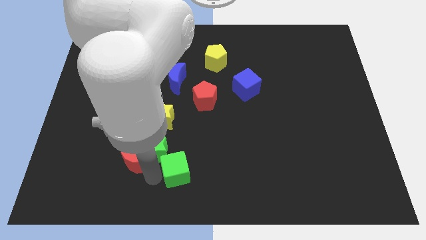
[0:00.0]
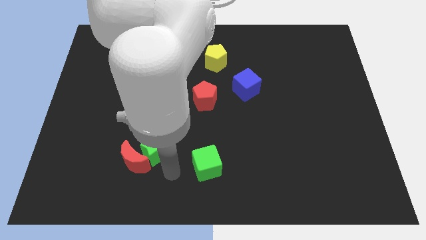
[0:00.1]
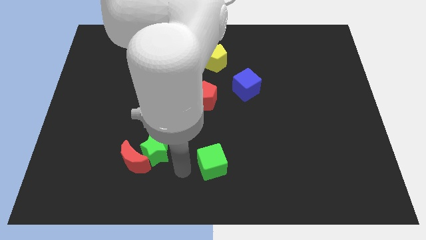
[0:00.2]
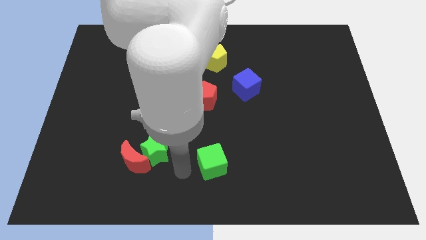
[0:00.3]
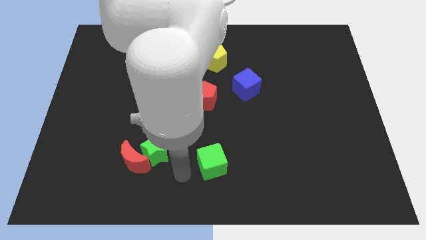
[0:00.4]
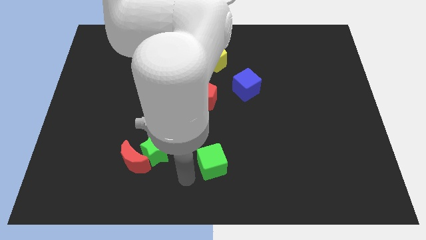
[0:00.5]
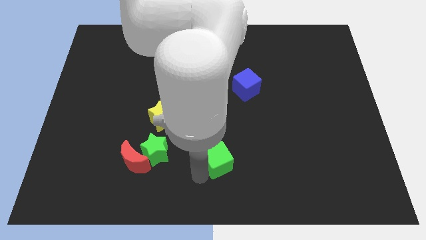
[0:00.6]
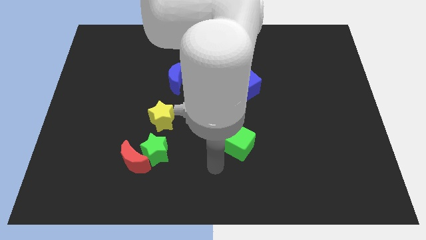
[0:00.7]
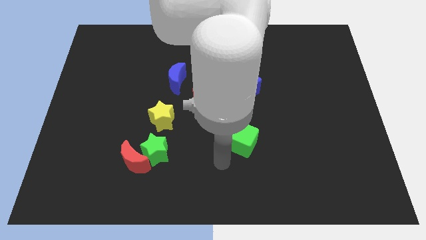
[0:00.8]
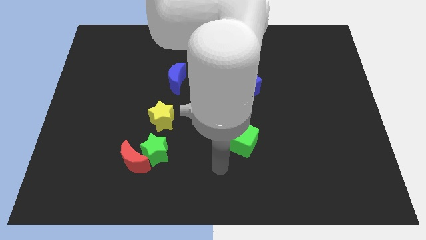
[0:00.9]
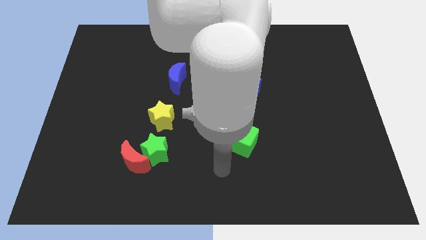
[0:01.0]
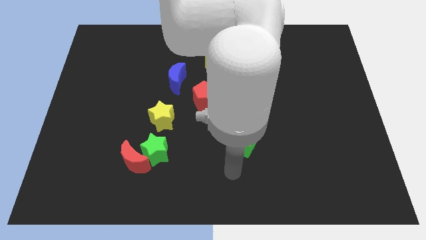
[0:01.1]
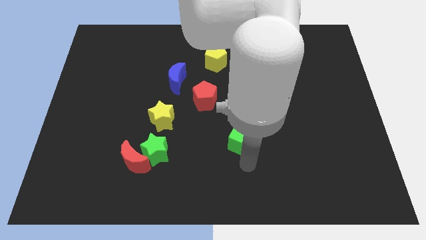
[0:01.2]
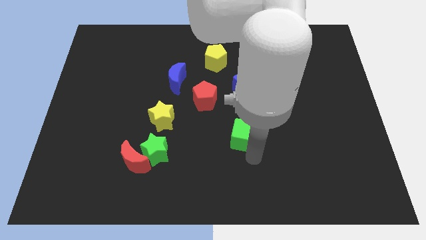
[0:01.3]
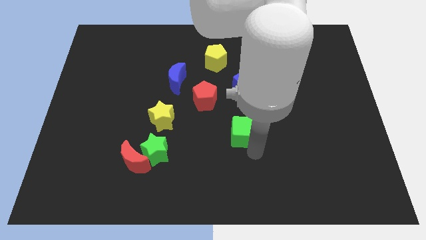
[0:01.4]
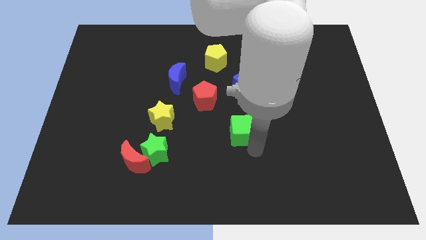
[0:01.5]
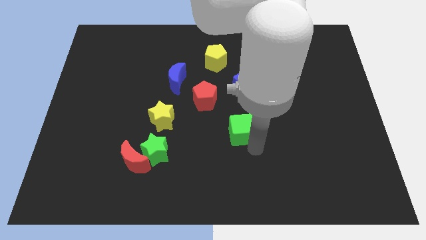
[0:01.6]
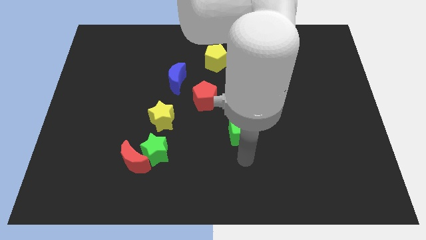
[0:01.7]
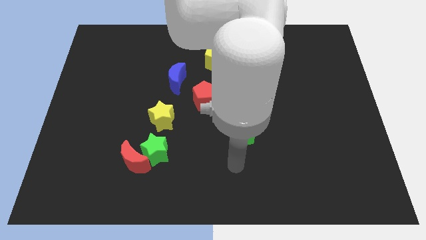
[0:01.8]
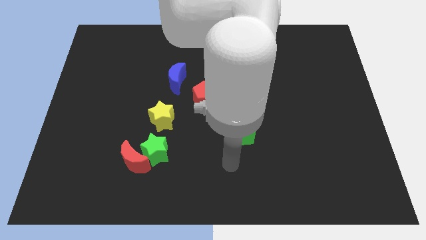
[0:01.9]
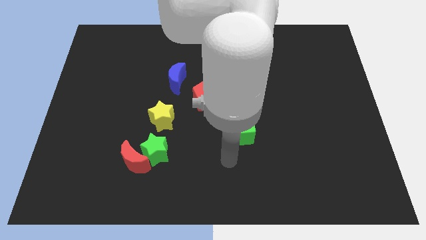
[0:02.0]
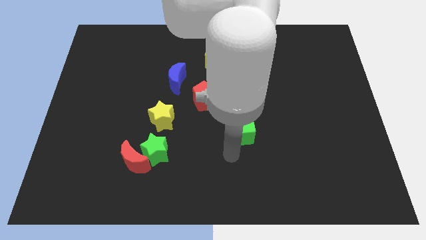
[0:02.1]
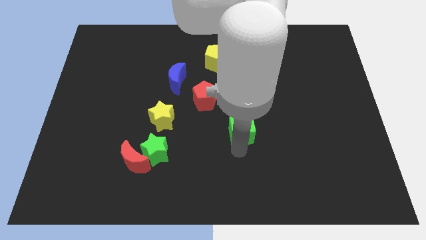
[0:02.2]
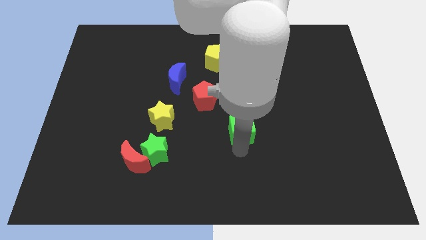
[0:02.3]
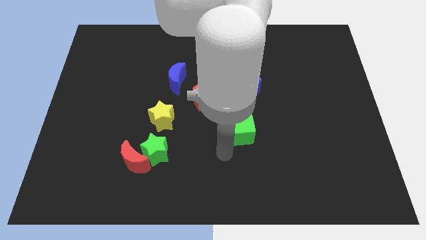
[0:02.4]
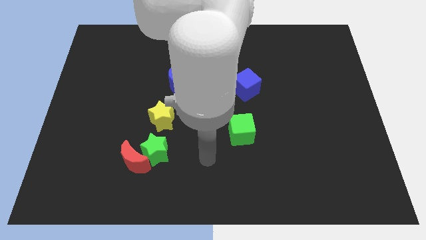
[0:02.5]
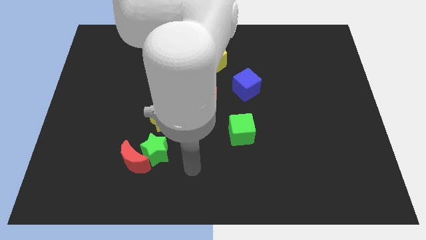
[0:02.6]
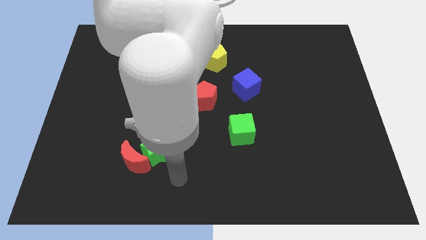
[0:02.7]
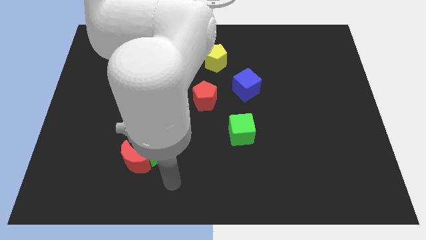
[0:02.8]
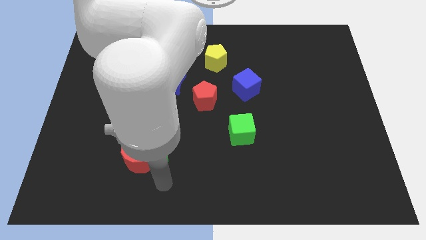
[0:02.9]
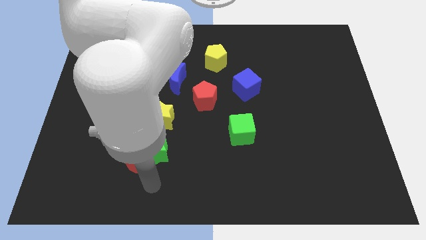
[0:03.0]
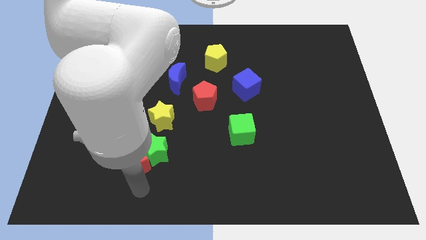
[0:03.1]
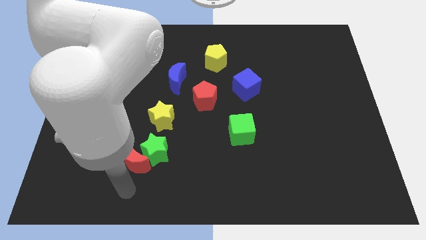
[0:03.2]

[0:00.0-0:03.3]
move the green cube away from the green star

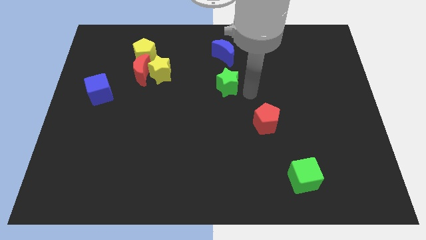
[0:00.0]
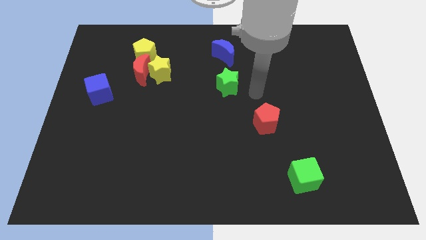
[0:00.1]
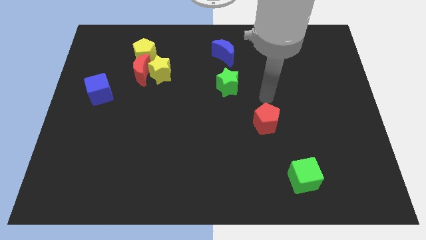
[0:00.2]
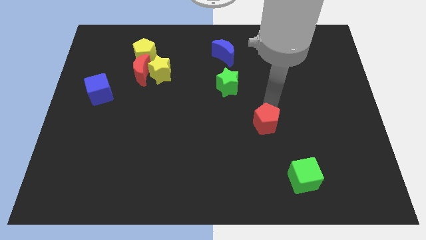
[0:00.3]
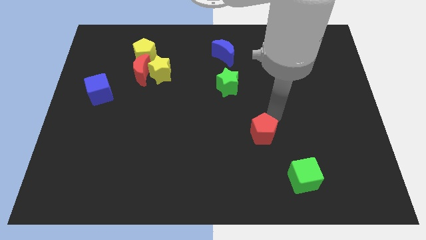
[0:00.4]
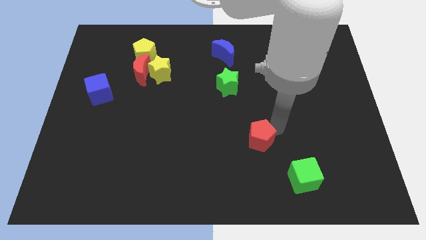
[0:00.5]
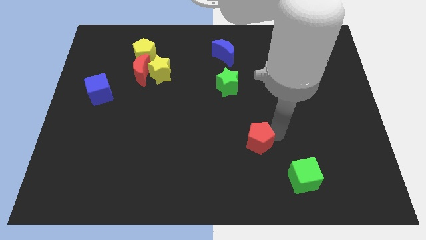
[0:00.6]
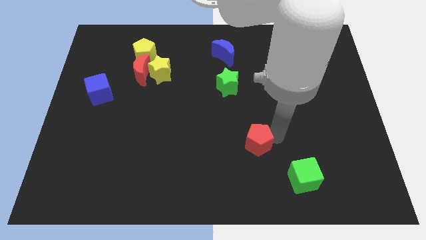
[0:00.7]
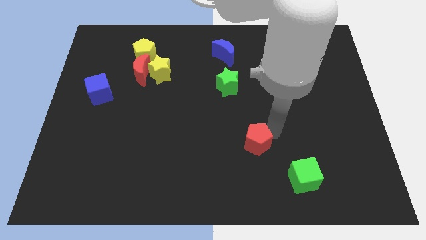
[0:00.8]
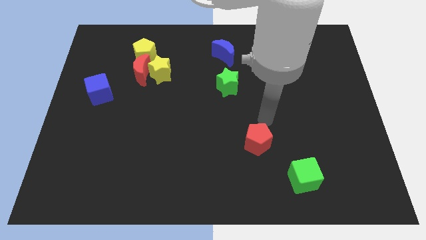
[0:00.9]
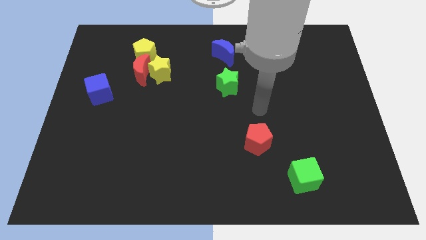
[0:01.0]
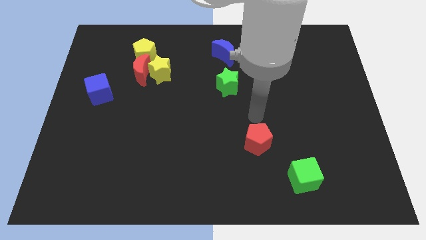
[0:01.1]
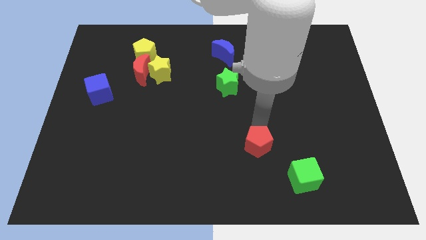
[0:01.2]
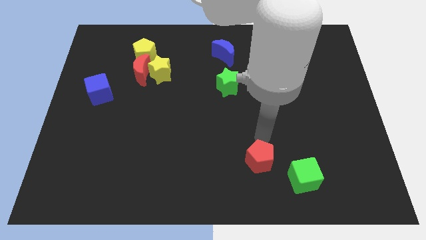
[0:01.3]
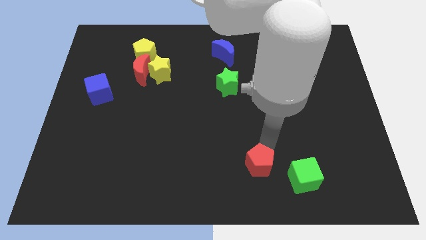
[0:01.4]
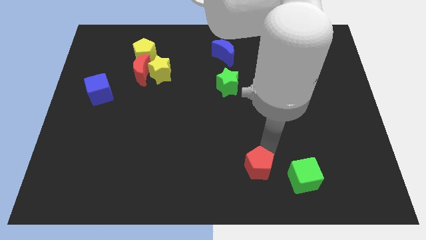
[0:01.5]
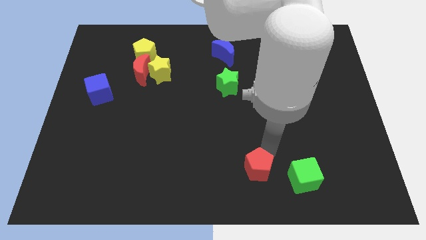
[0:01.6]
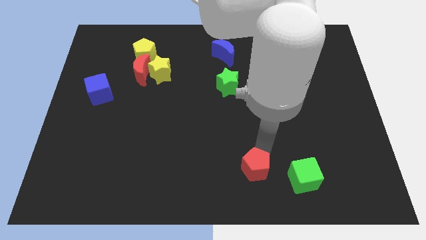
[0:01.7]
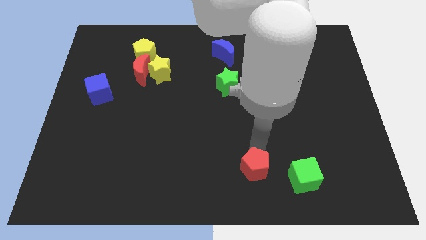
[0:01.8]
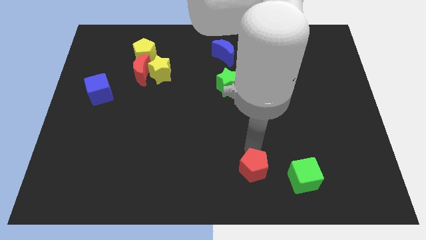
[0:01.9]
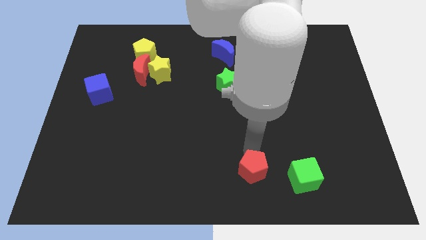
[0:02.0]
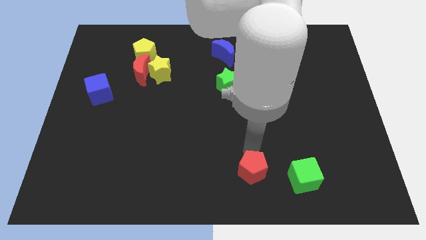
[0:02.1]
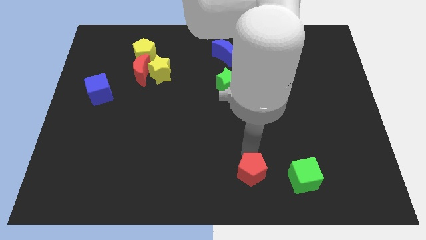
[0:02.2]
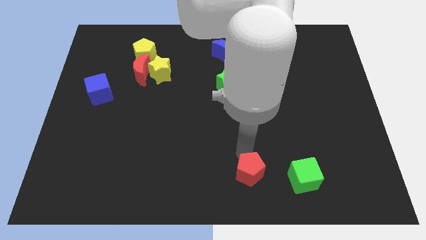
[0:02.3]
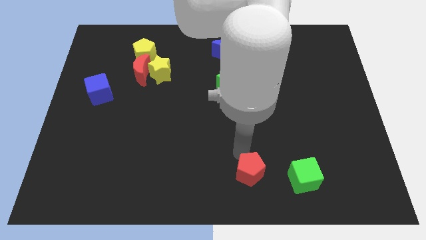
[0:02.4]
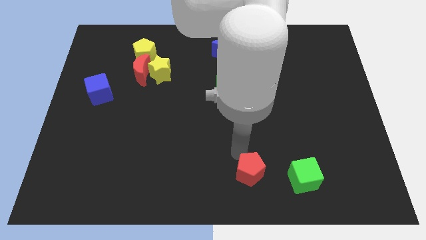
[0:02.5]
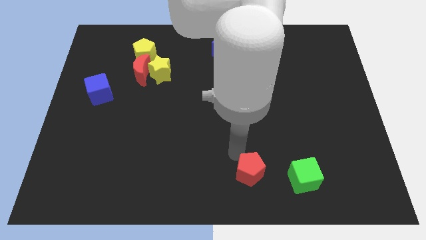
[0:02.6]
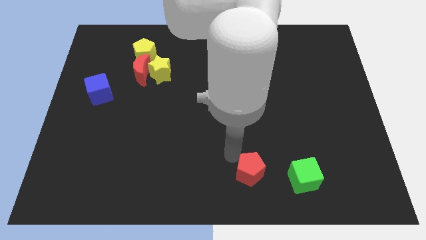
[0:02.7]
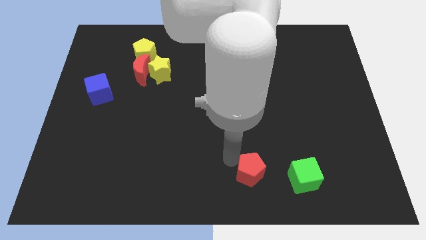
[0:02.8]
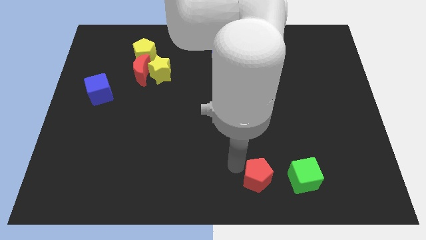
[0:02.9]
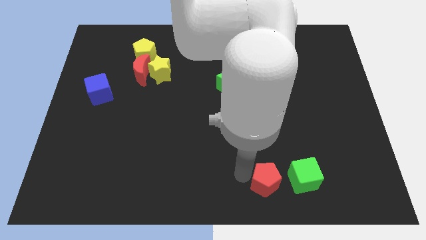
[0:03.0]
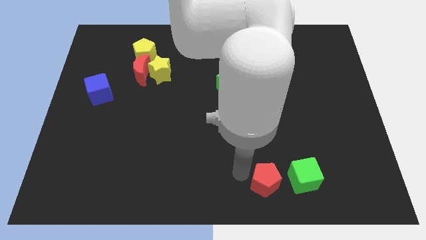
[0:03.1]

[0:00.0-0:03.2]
move the red pentagon to the left of green cube

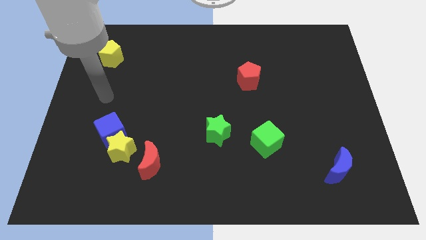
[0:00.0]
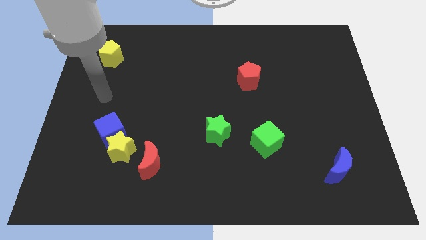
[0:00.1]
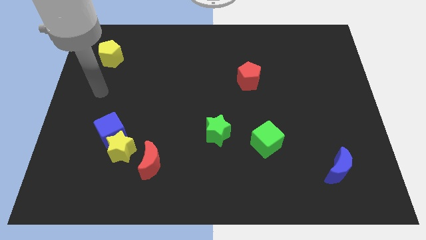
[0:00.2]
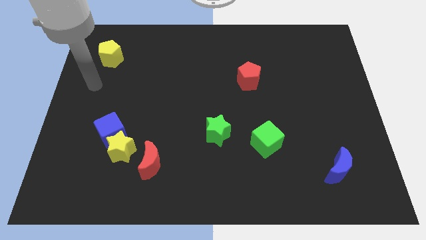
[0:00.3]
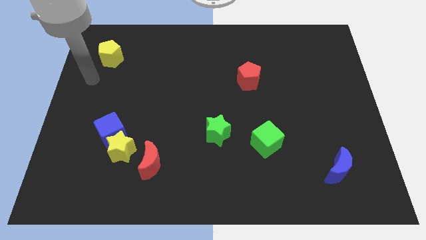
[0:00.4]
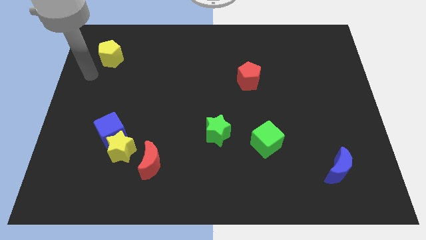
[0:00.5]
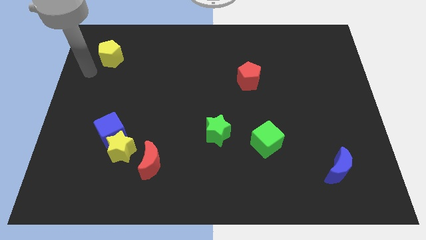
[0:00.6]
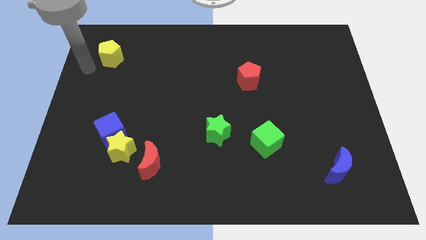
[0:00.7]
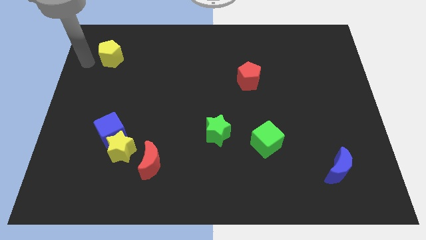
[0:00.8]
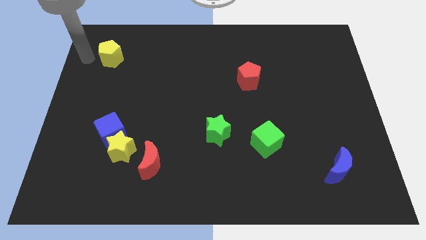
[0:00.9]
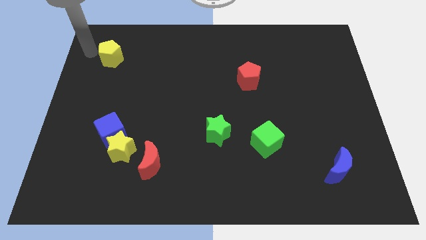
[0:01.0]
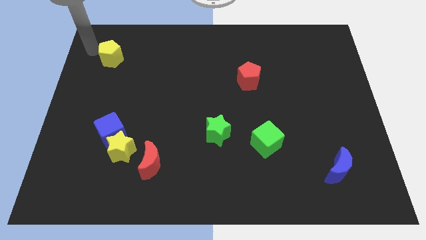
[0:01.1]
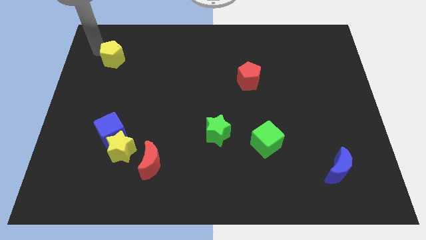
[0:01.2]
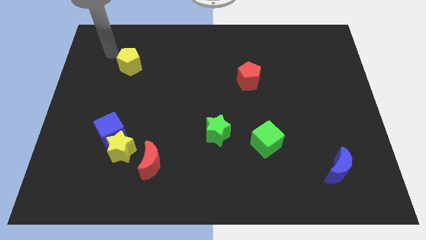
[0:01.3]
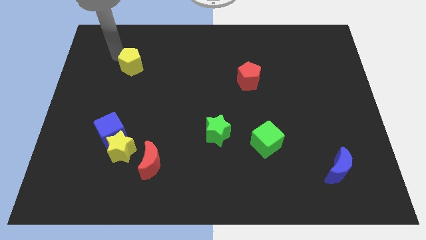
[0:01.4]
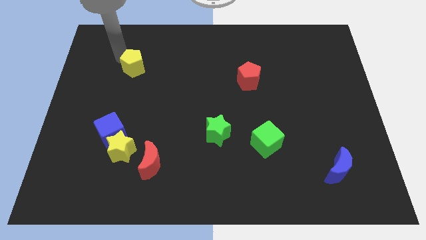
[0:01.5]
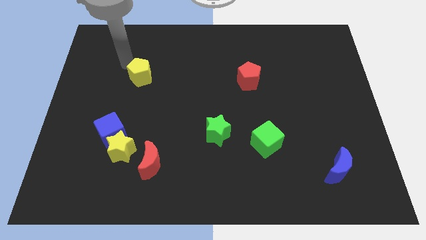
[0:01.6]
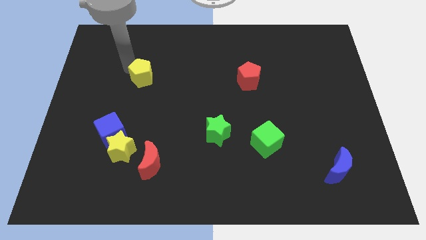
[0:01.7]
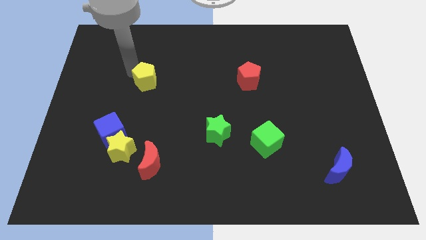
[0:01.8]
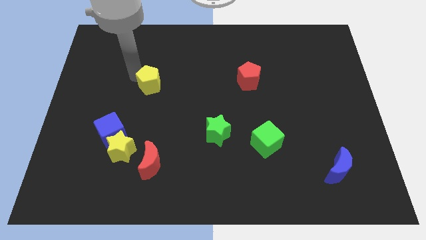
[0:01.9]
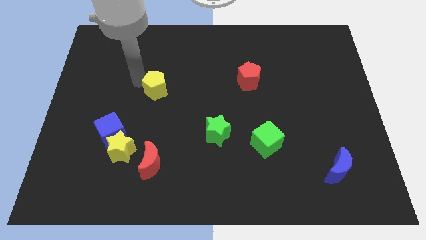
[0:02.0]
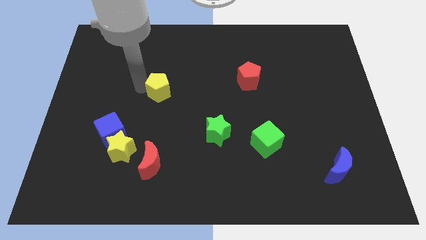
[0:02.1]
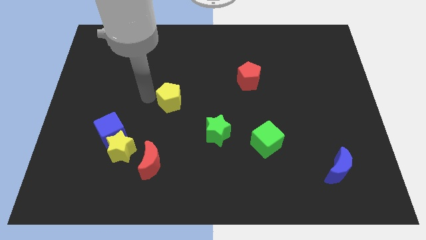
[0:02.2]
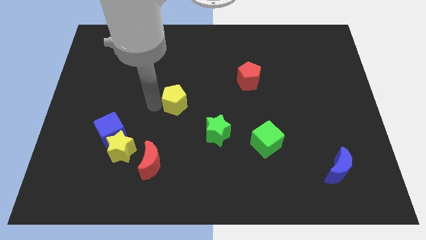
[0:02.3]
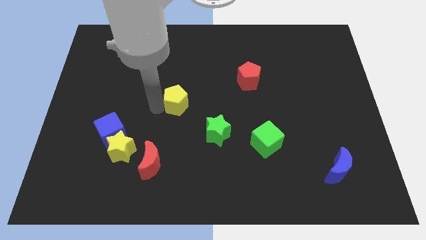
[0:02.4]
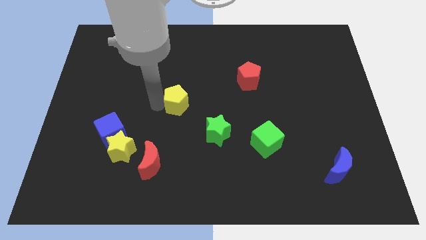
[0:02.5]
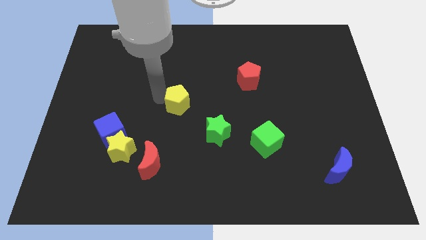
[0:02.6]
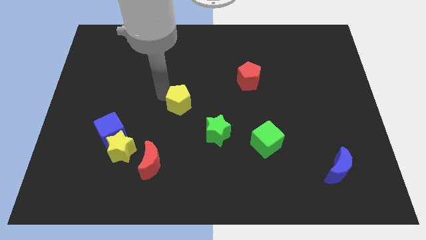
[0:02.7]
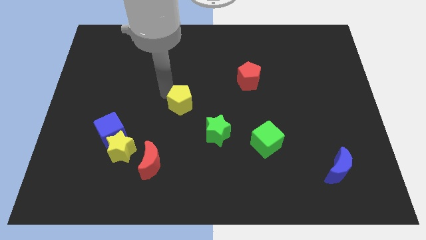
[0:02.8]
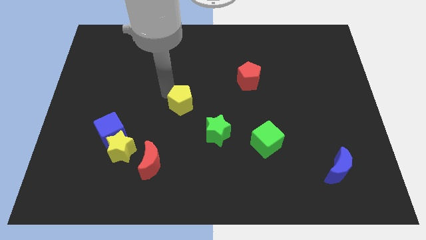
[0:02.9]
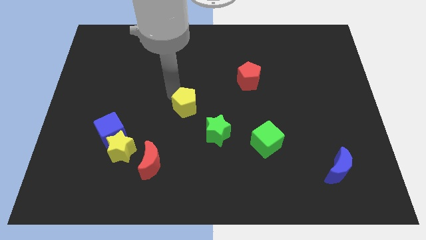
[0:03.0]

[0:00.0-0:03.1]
move yellow pentagon slightly towards the green star
